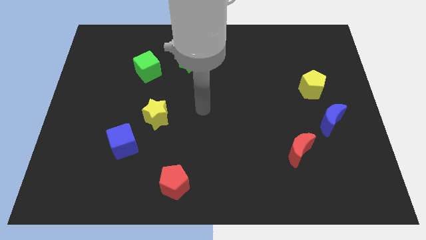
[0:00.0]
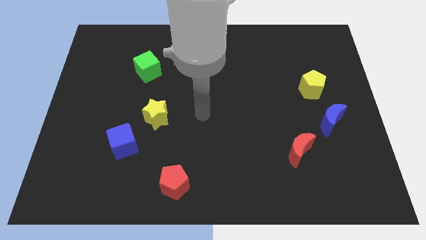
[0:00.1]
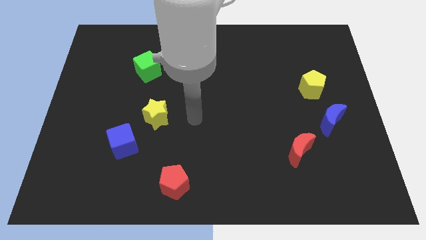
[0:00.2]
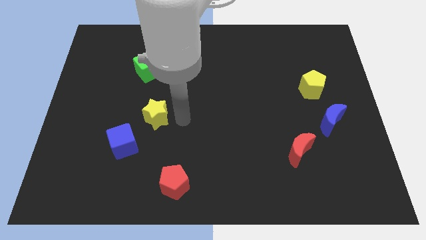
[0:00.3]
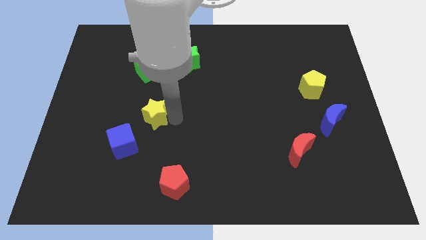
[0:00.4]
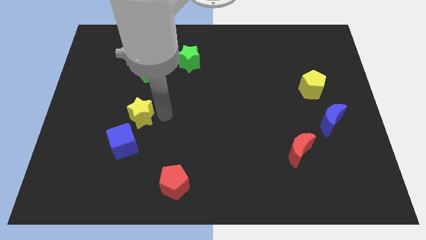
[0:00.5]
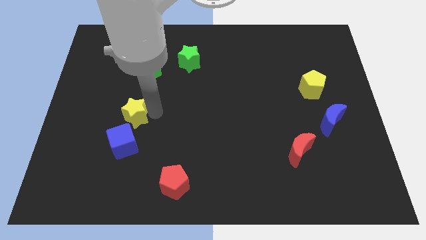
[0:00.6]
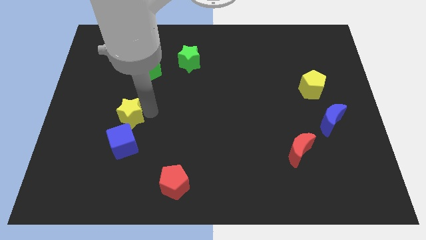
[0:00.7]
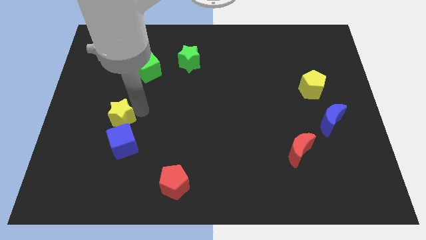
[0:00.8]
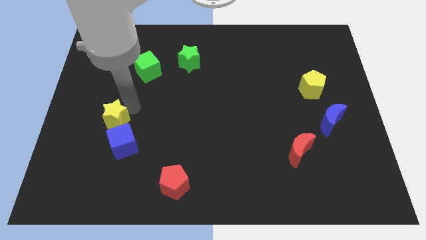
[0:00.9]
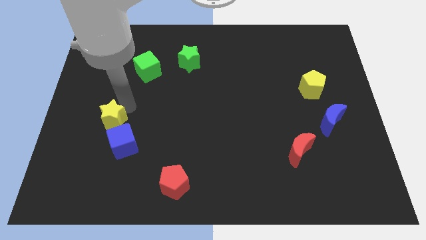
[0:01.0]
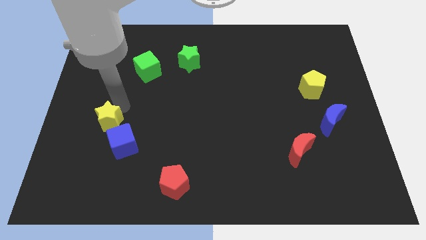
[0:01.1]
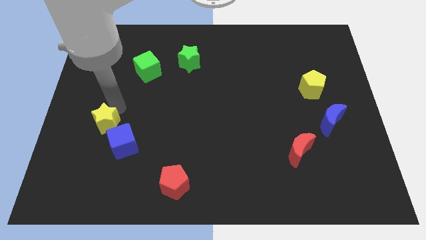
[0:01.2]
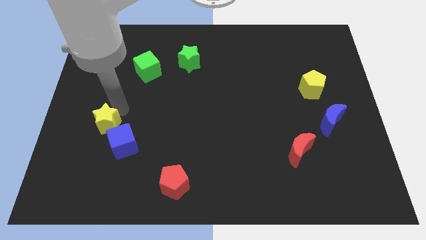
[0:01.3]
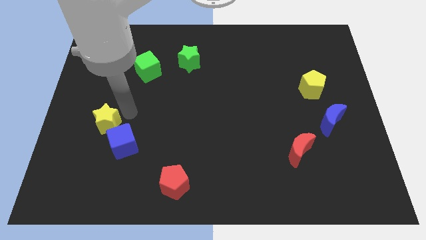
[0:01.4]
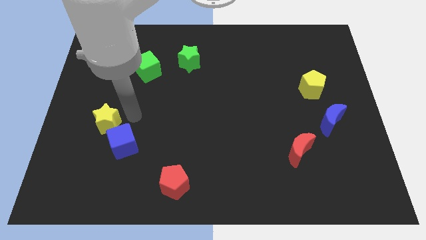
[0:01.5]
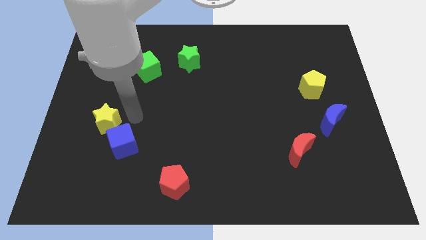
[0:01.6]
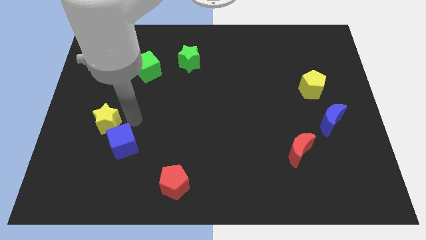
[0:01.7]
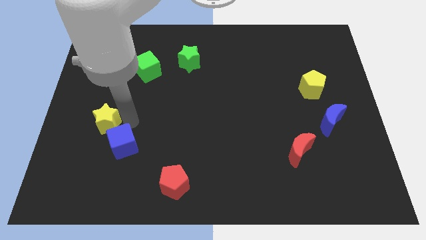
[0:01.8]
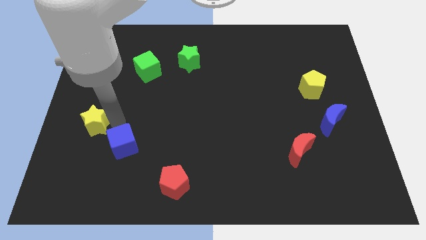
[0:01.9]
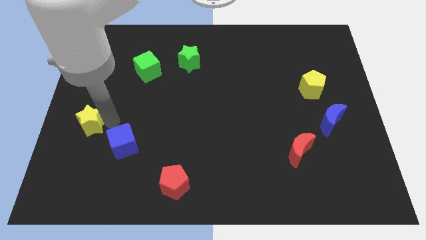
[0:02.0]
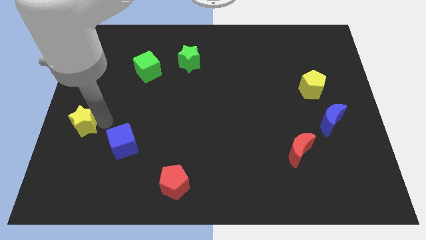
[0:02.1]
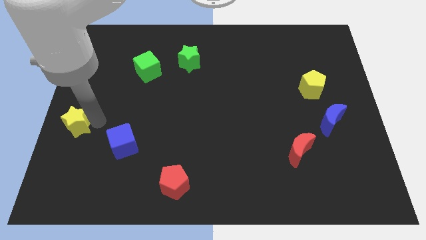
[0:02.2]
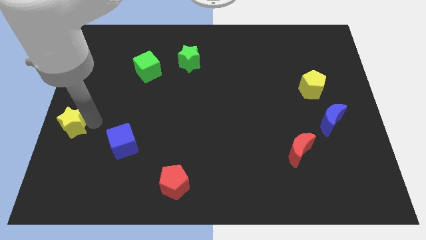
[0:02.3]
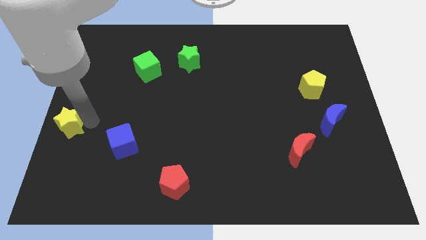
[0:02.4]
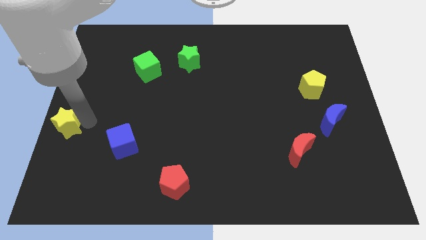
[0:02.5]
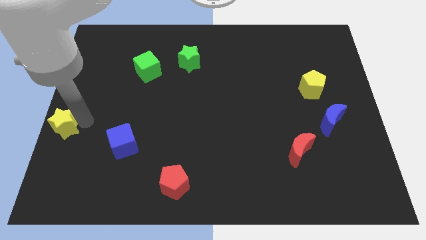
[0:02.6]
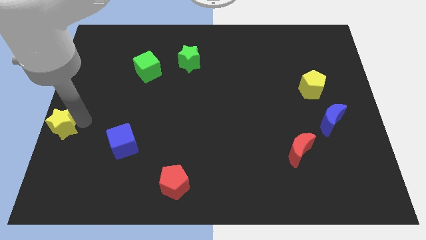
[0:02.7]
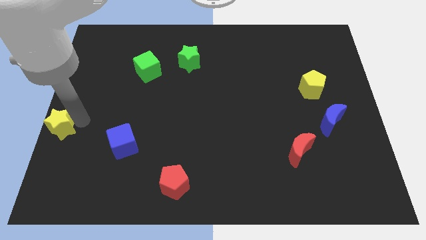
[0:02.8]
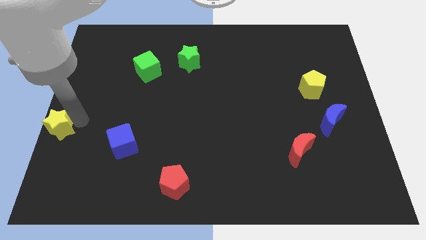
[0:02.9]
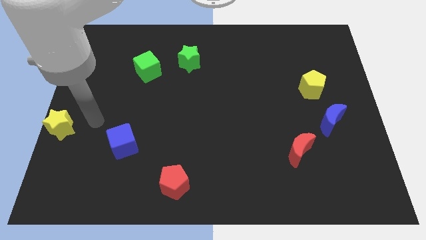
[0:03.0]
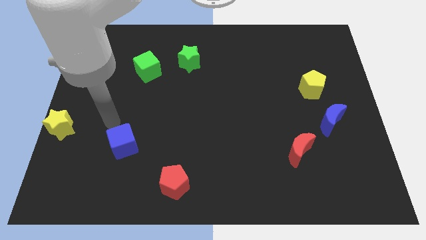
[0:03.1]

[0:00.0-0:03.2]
move the yellow star towards the center left side of the board

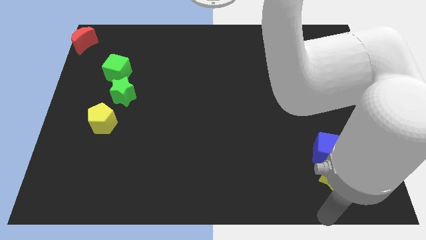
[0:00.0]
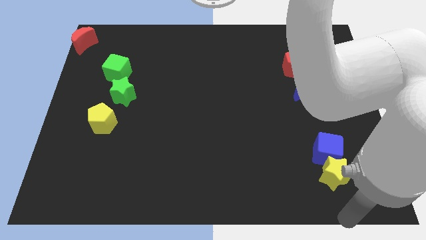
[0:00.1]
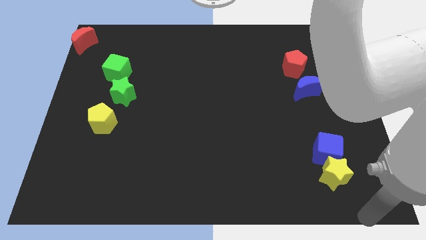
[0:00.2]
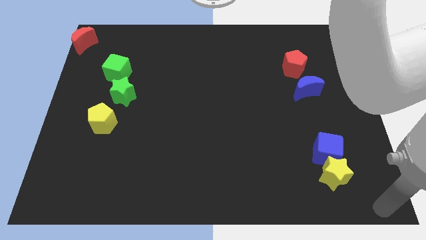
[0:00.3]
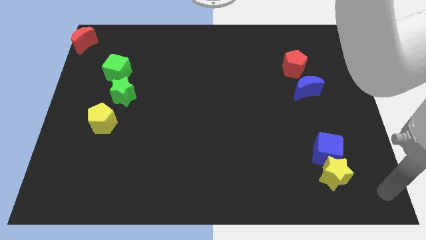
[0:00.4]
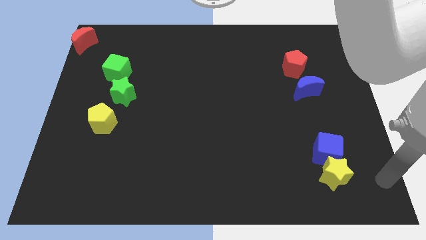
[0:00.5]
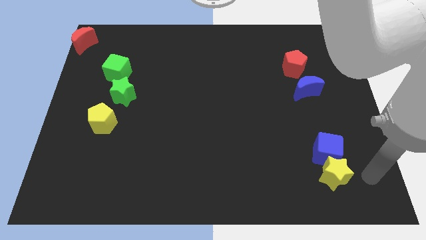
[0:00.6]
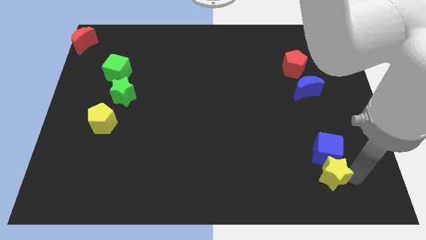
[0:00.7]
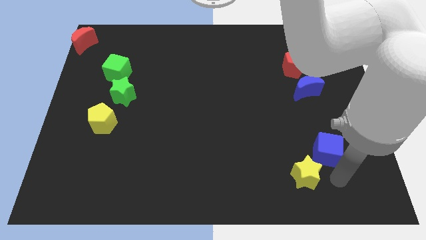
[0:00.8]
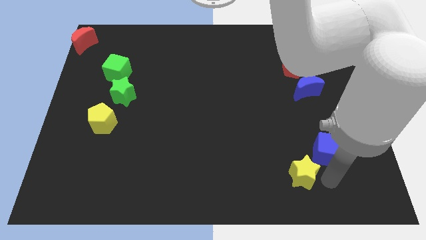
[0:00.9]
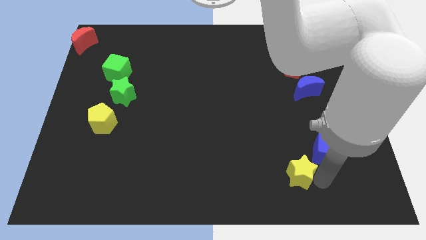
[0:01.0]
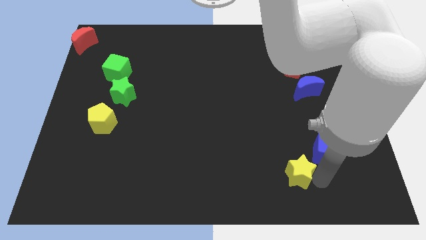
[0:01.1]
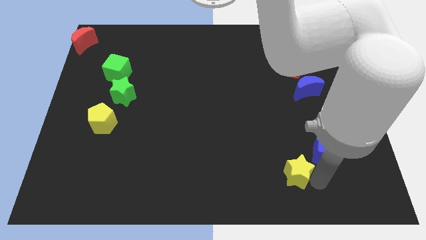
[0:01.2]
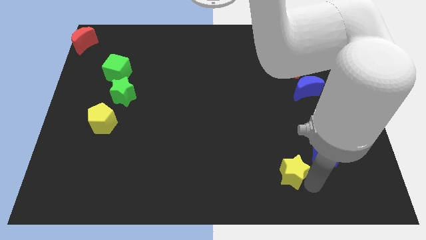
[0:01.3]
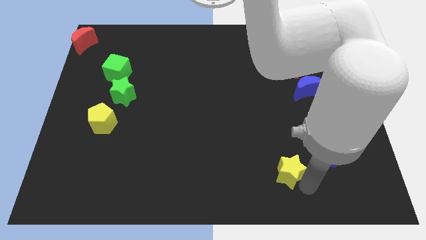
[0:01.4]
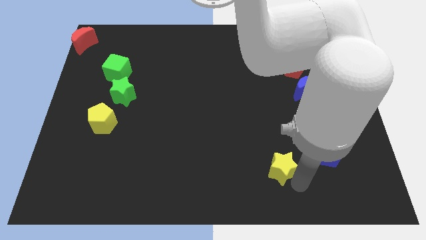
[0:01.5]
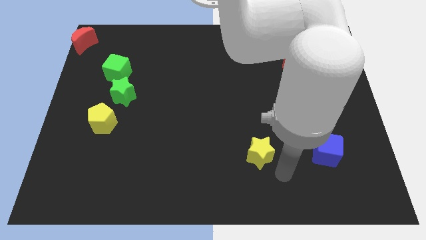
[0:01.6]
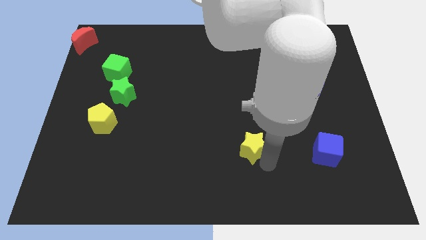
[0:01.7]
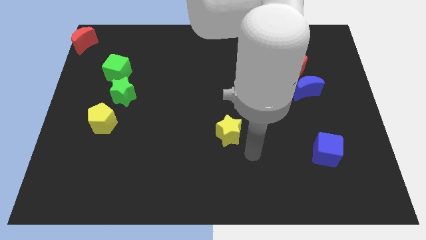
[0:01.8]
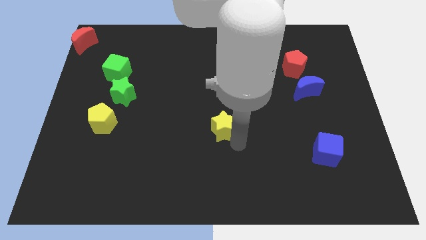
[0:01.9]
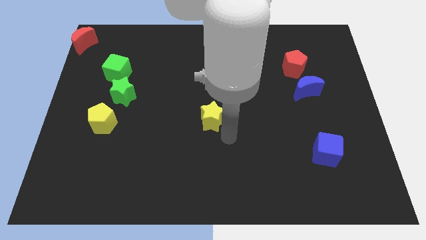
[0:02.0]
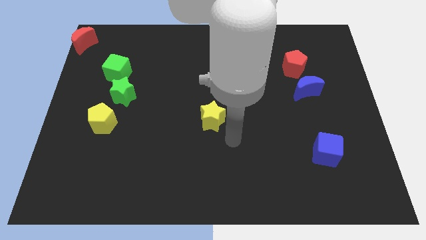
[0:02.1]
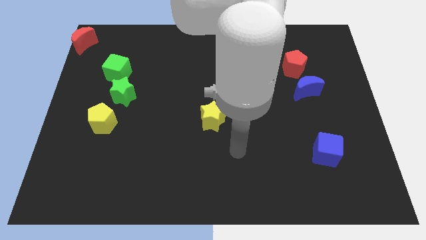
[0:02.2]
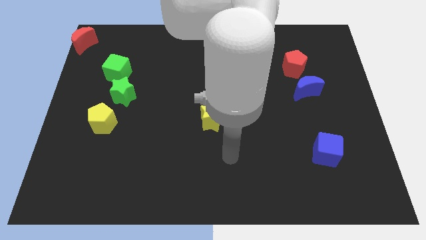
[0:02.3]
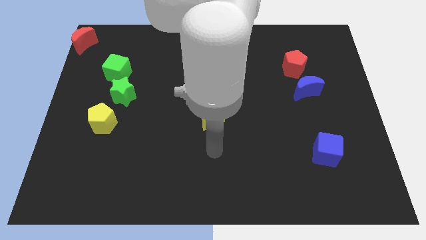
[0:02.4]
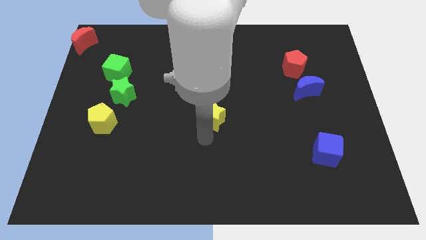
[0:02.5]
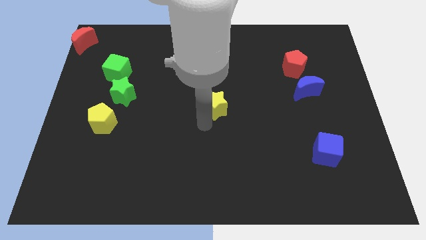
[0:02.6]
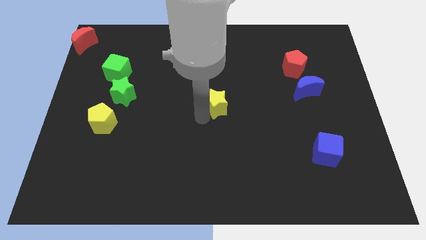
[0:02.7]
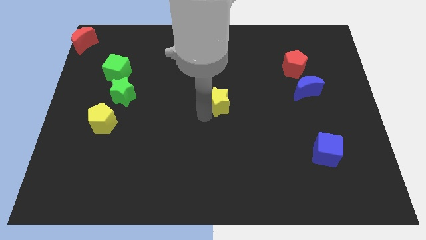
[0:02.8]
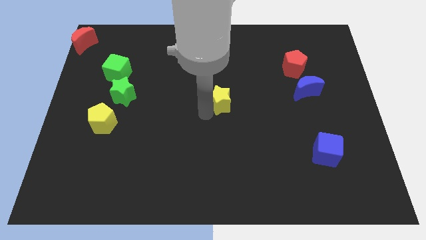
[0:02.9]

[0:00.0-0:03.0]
push the yellow star to the center of board

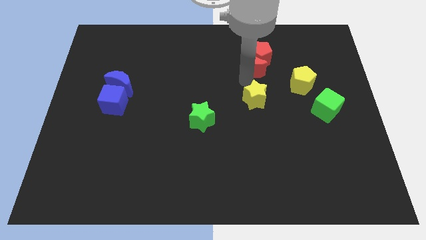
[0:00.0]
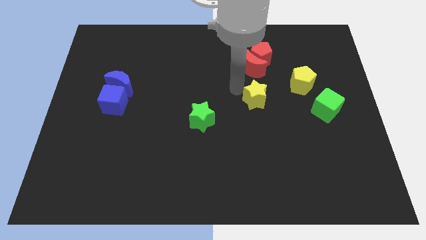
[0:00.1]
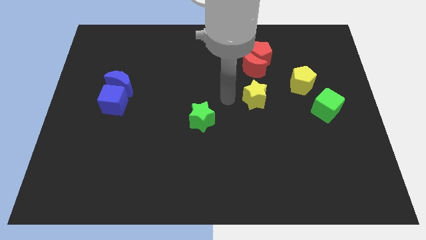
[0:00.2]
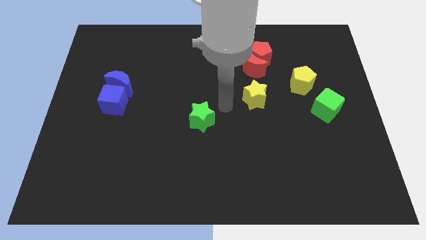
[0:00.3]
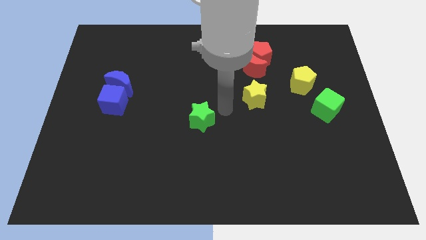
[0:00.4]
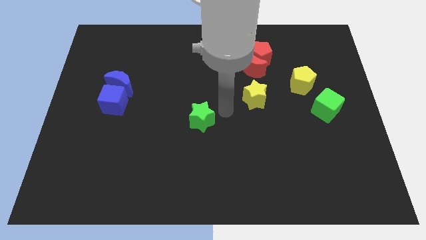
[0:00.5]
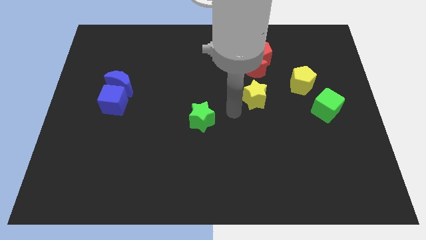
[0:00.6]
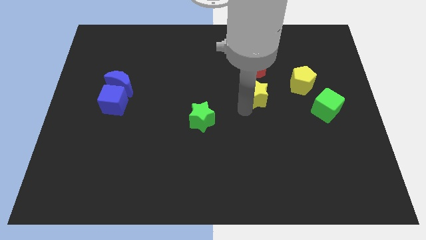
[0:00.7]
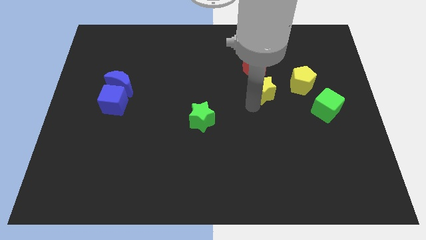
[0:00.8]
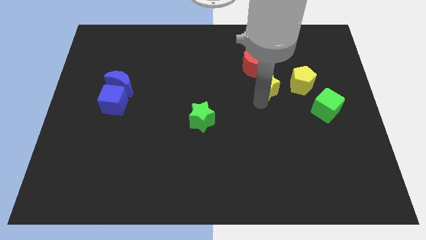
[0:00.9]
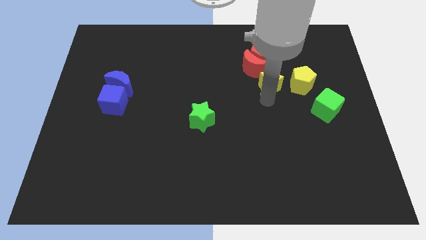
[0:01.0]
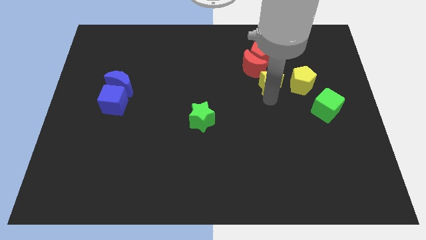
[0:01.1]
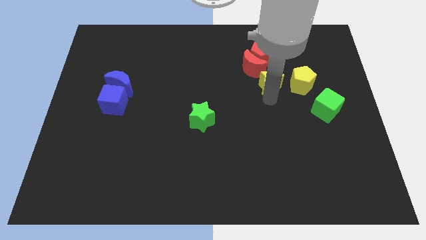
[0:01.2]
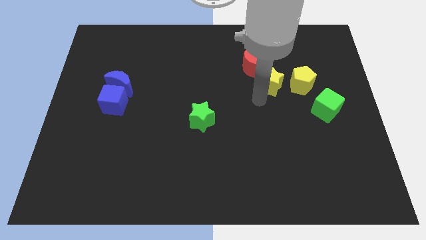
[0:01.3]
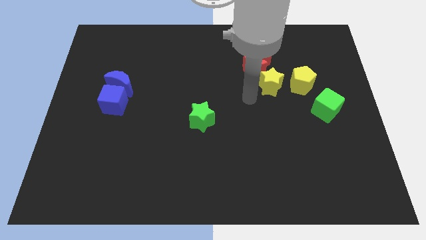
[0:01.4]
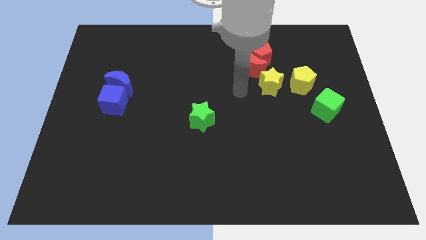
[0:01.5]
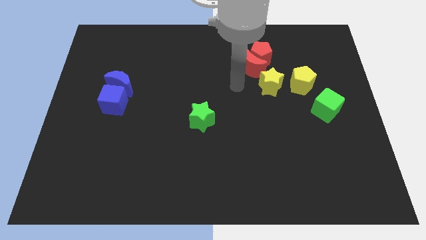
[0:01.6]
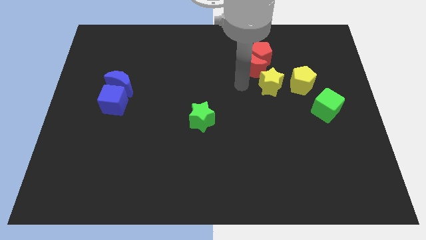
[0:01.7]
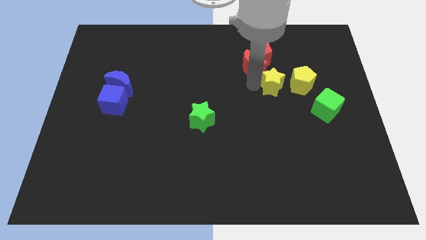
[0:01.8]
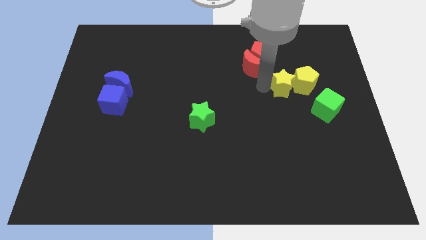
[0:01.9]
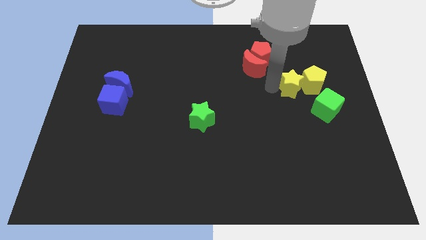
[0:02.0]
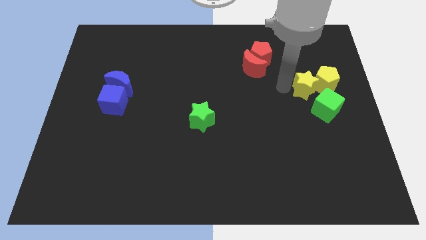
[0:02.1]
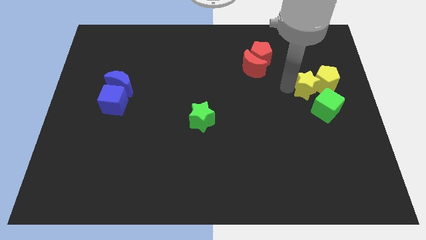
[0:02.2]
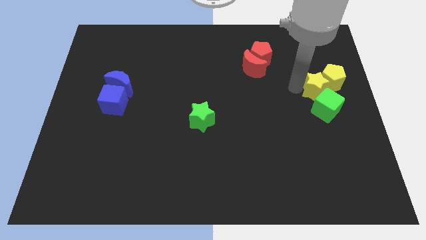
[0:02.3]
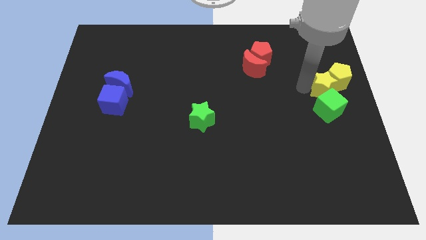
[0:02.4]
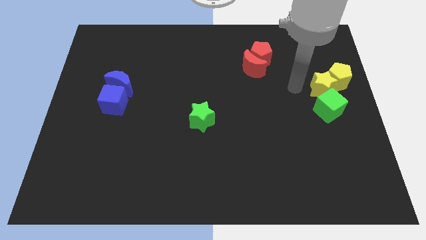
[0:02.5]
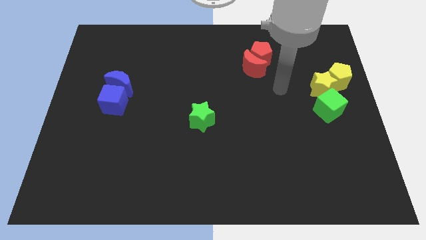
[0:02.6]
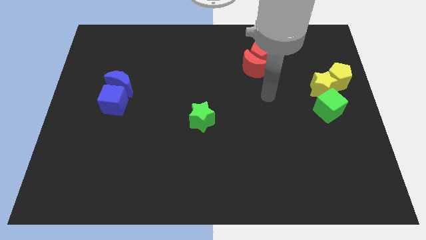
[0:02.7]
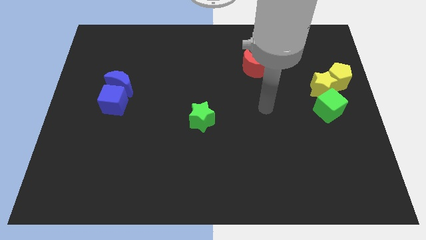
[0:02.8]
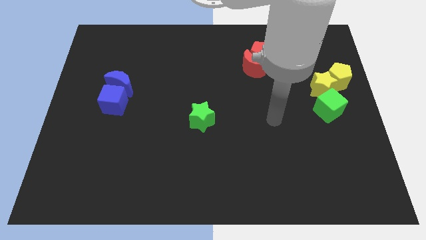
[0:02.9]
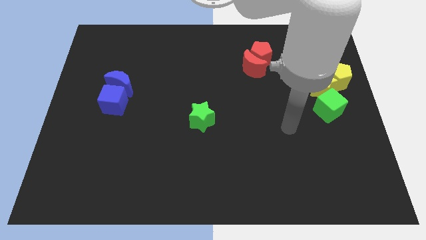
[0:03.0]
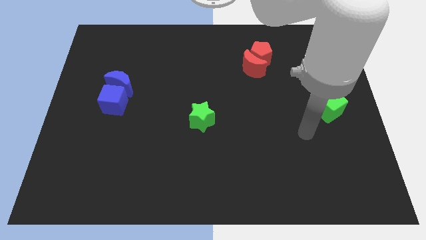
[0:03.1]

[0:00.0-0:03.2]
push the yellow star into the yellow pentagon
